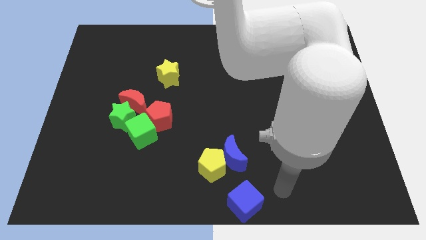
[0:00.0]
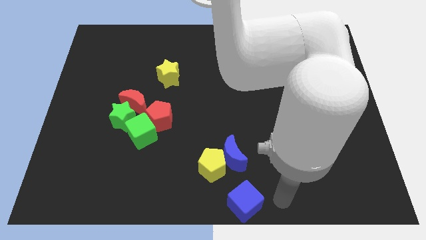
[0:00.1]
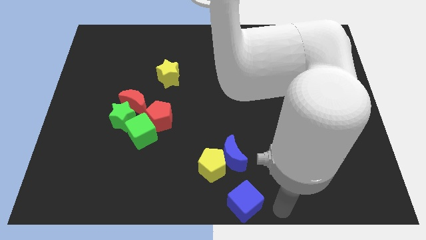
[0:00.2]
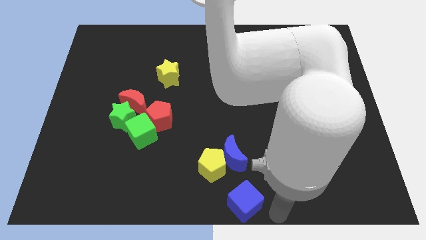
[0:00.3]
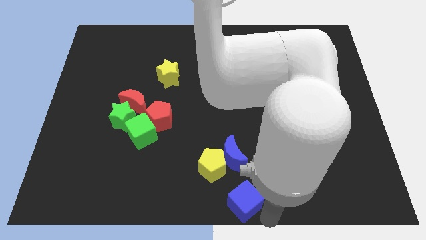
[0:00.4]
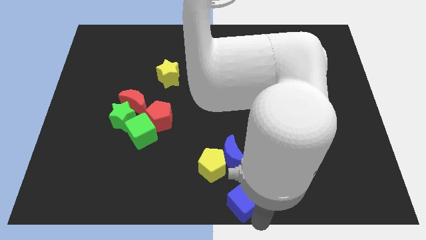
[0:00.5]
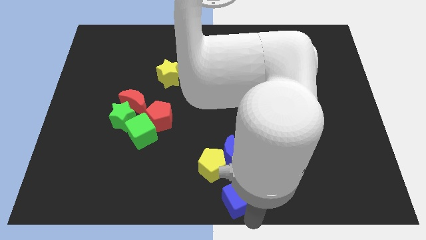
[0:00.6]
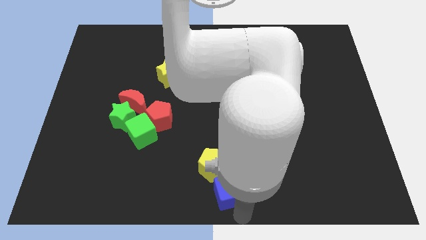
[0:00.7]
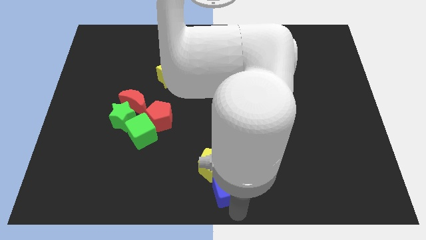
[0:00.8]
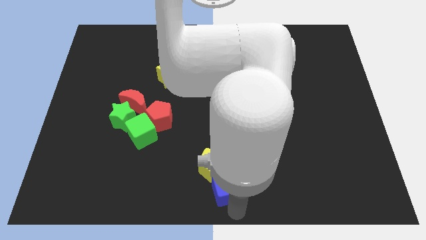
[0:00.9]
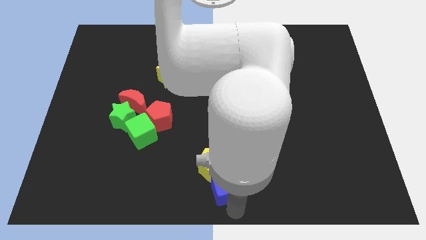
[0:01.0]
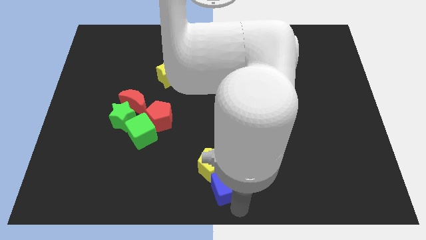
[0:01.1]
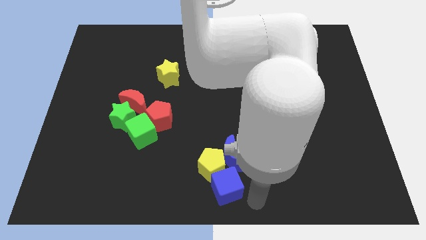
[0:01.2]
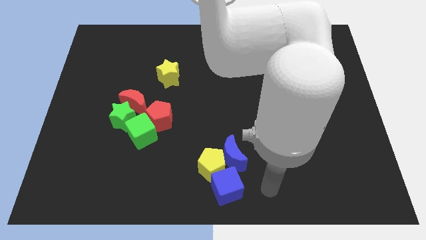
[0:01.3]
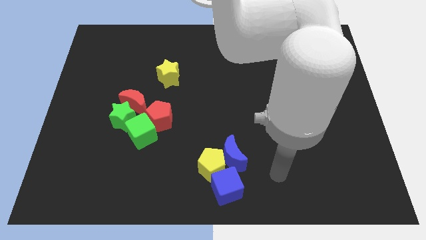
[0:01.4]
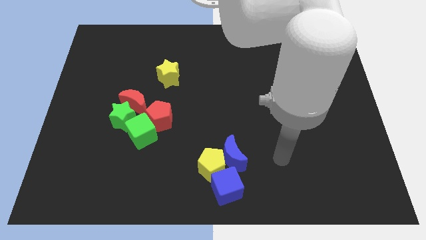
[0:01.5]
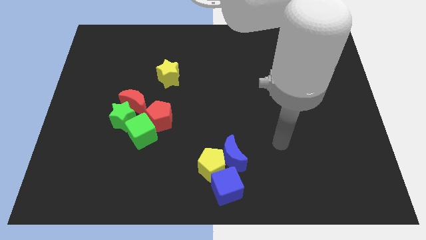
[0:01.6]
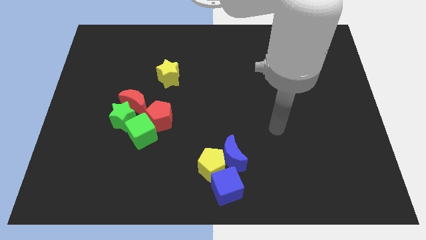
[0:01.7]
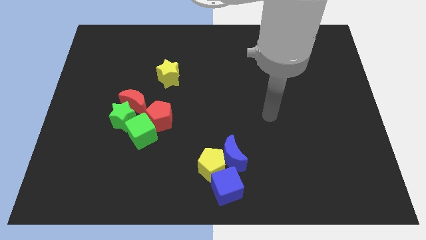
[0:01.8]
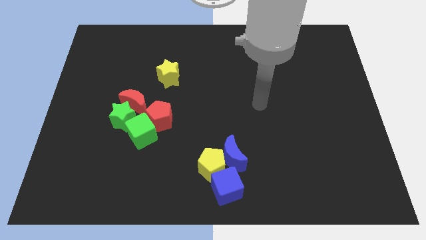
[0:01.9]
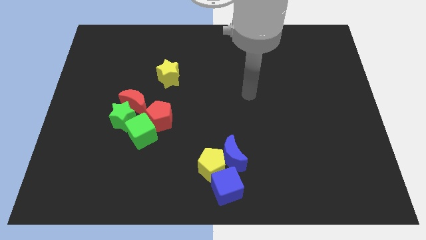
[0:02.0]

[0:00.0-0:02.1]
place the arm towards the center of the board

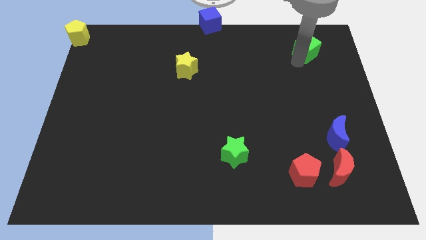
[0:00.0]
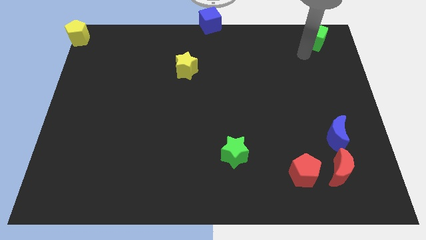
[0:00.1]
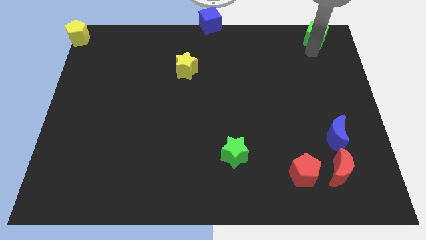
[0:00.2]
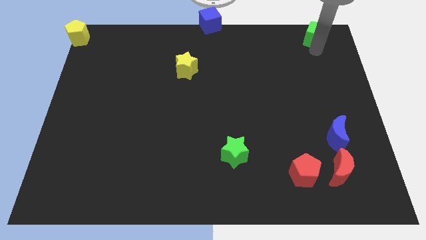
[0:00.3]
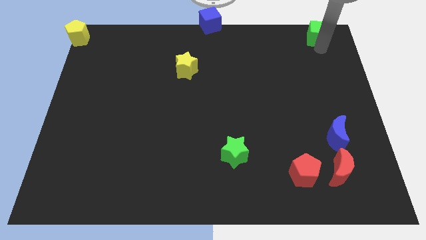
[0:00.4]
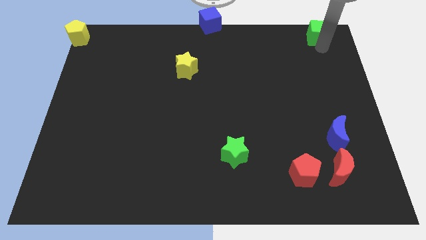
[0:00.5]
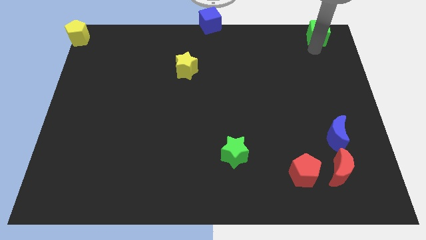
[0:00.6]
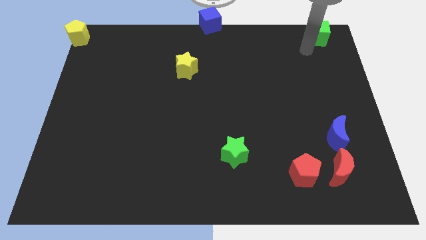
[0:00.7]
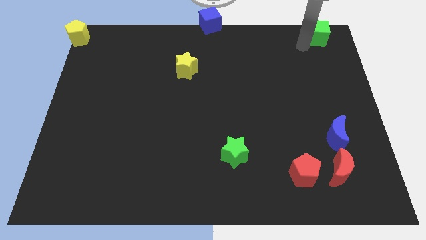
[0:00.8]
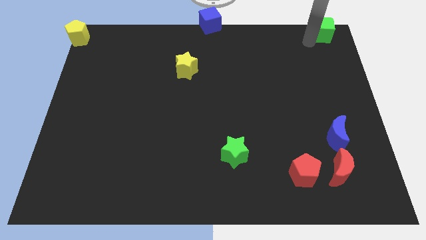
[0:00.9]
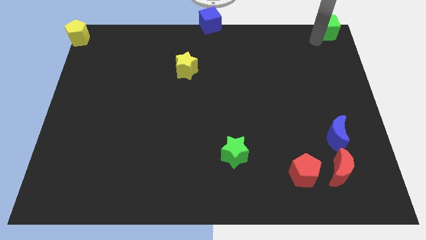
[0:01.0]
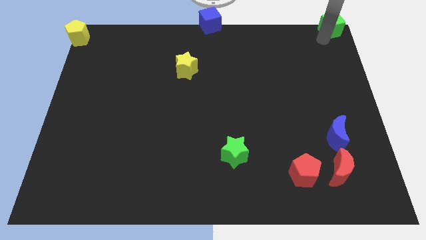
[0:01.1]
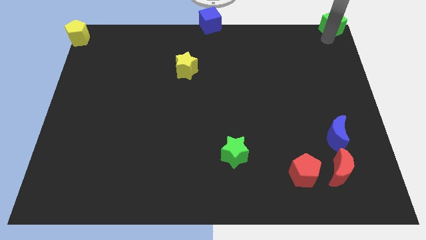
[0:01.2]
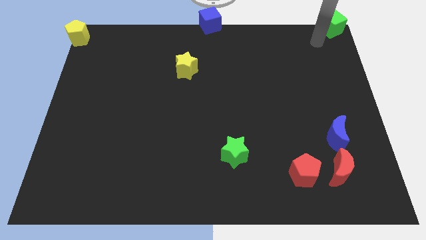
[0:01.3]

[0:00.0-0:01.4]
move green cube to the top right corner

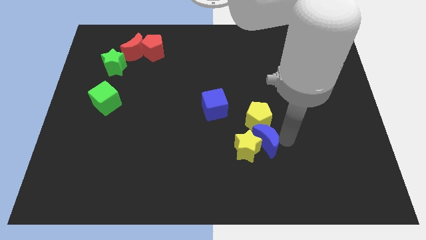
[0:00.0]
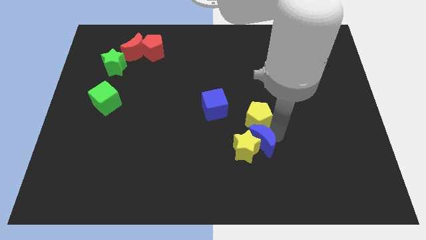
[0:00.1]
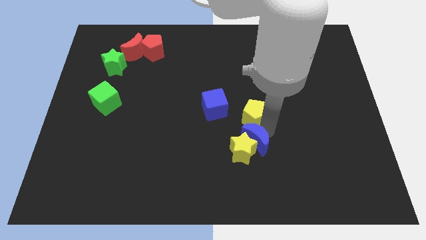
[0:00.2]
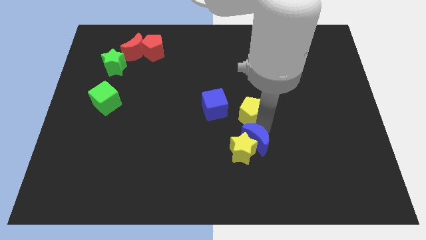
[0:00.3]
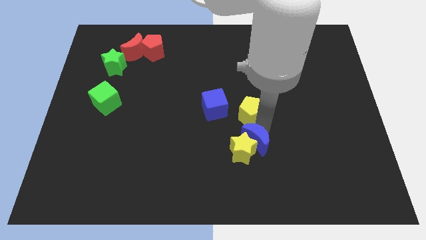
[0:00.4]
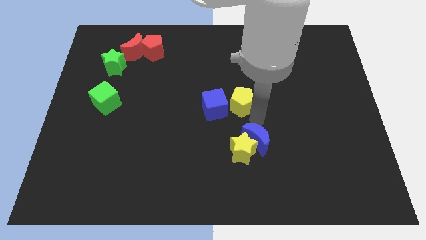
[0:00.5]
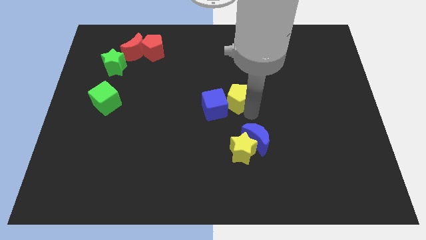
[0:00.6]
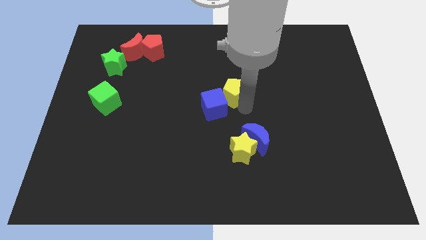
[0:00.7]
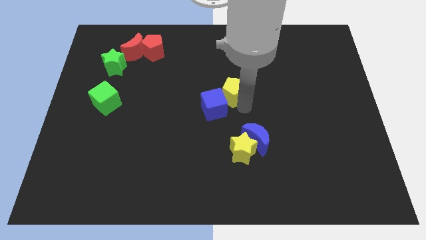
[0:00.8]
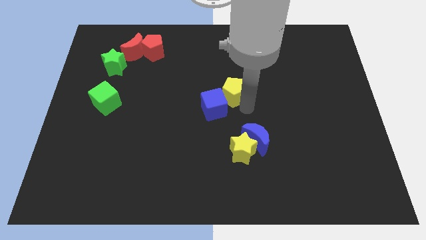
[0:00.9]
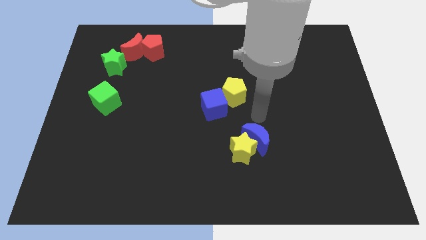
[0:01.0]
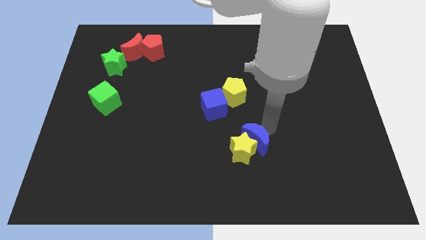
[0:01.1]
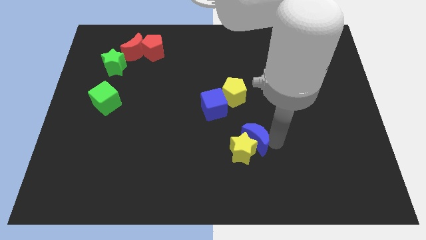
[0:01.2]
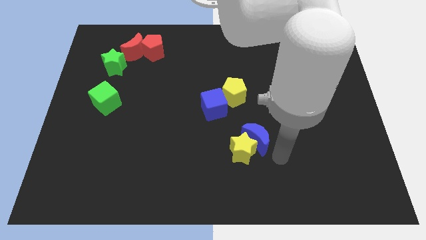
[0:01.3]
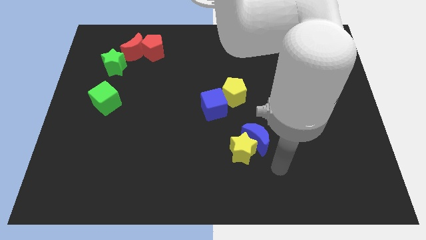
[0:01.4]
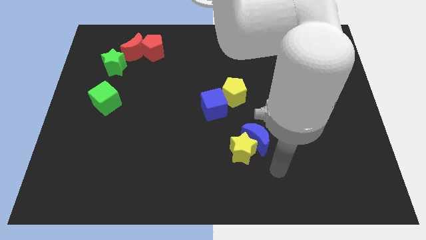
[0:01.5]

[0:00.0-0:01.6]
push the yellow pentagon to the top right side of the blue cube

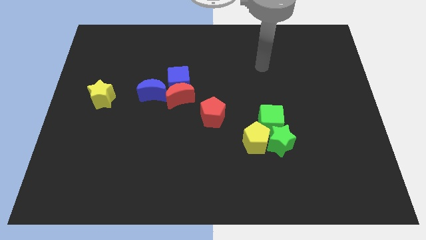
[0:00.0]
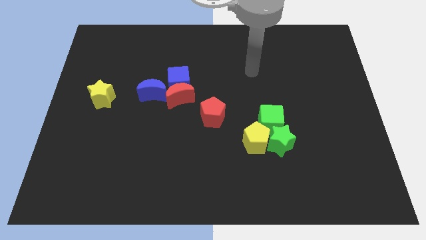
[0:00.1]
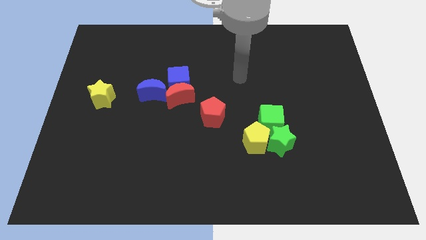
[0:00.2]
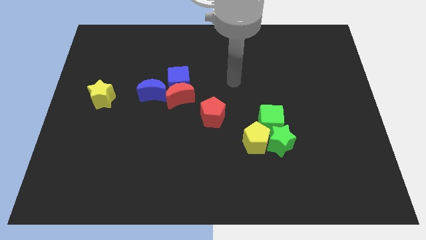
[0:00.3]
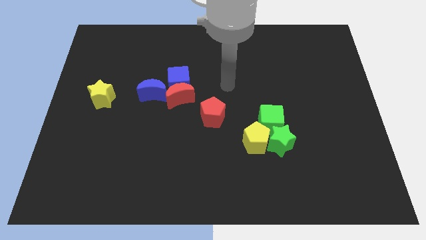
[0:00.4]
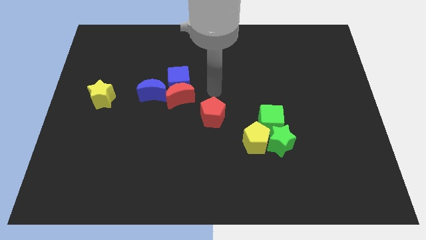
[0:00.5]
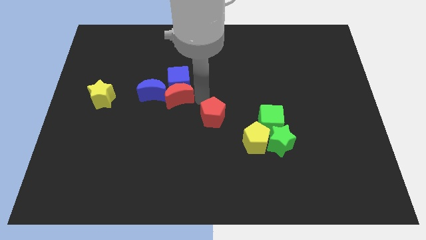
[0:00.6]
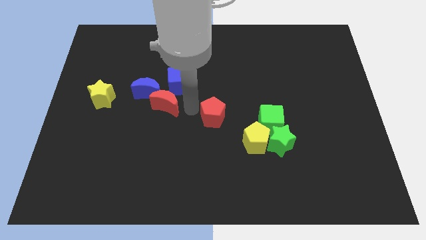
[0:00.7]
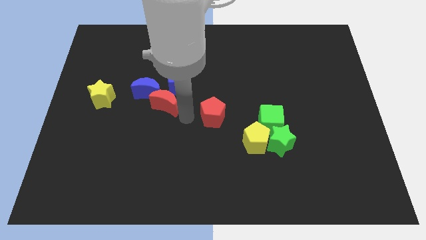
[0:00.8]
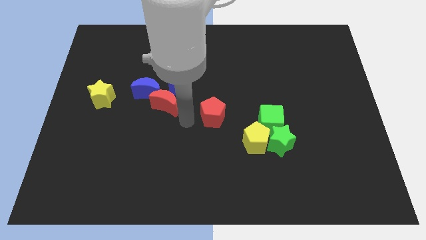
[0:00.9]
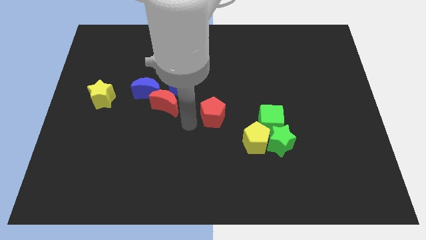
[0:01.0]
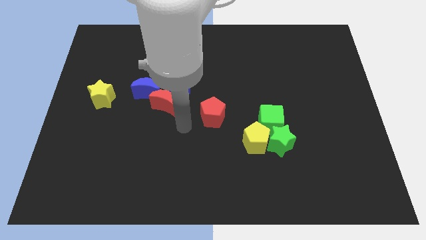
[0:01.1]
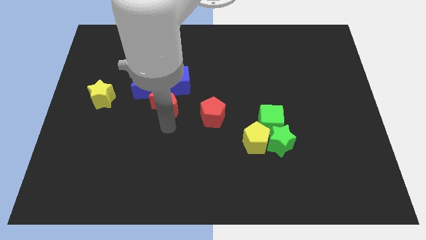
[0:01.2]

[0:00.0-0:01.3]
slightly push the red and blue moons

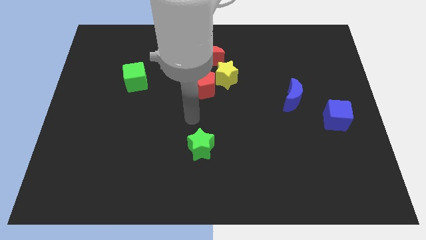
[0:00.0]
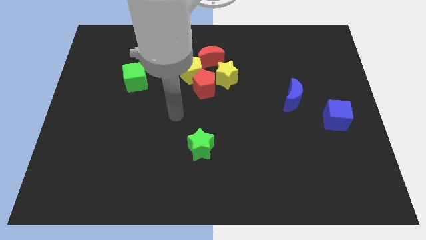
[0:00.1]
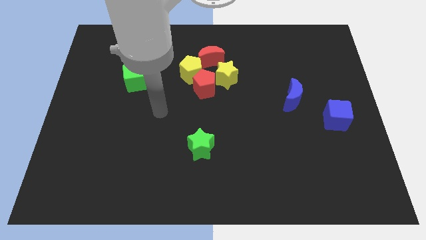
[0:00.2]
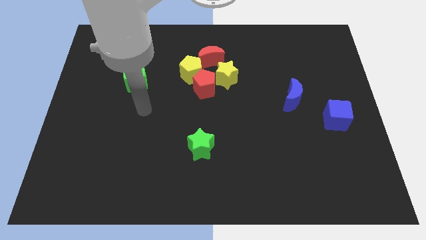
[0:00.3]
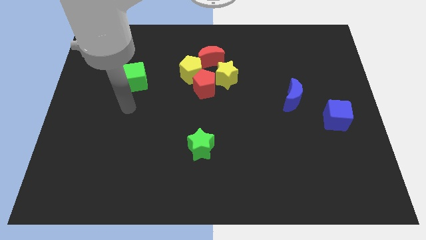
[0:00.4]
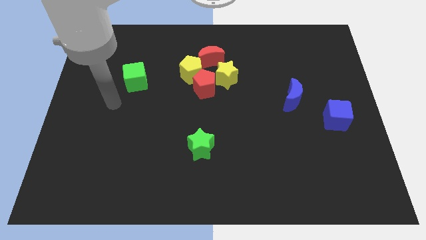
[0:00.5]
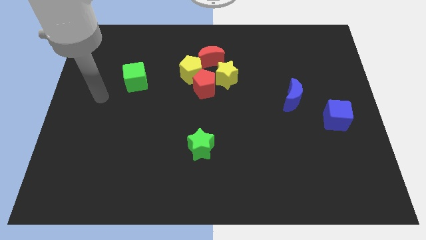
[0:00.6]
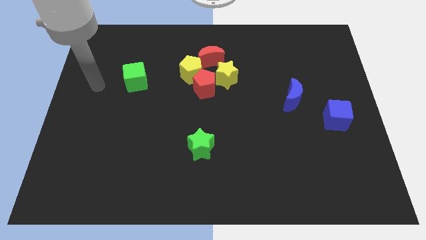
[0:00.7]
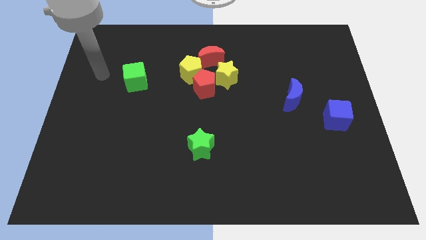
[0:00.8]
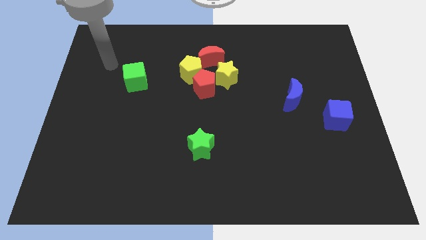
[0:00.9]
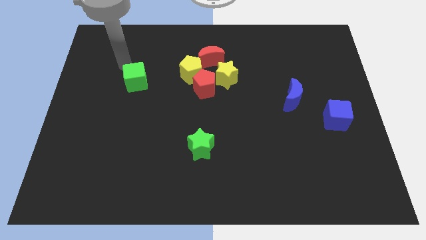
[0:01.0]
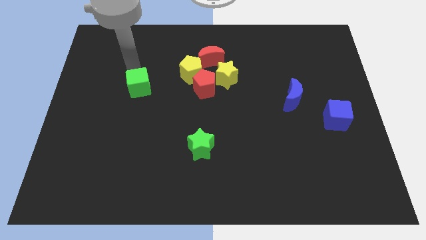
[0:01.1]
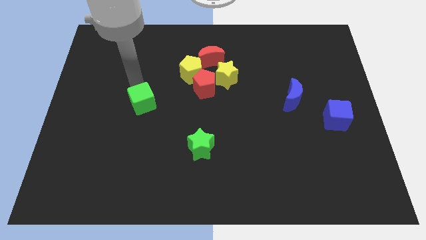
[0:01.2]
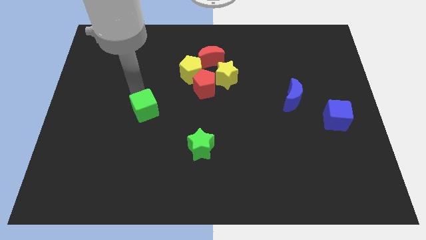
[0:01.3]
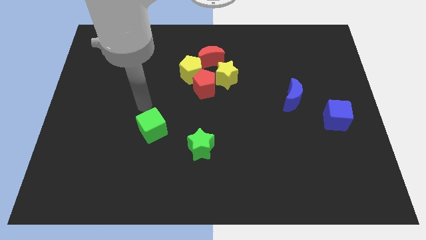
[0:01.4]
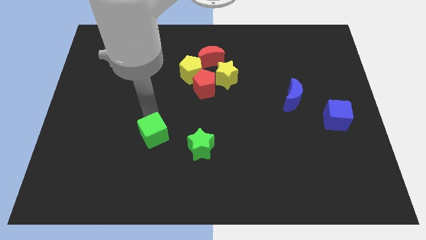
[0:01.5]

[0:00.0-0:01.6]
push the green cube towards the bottom center

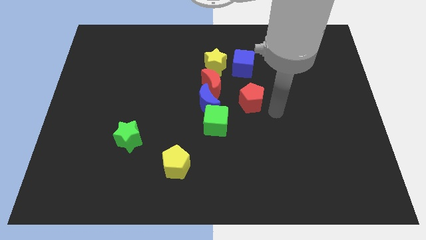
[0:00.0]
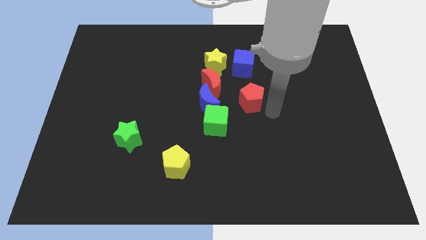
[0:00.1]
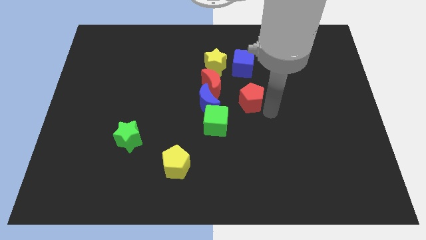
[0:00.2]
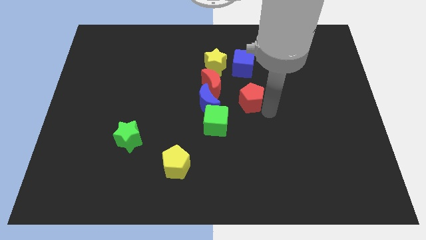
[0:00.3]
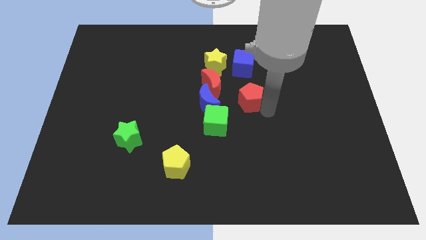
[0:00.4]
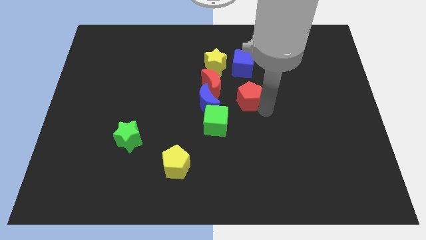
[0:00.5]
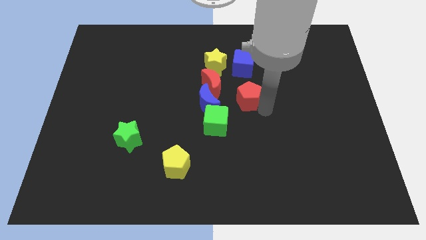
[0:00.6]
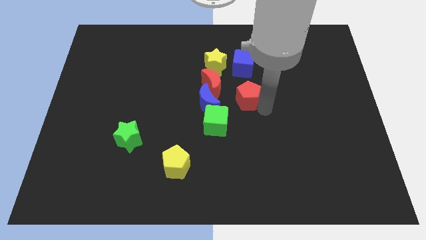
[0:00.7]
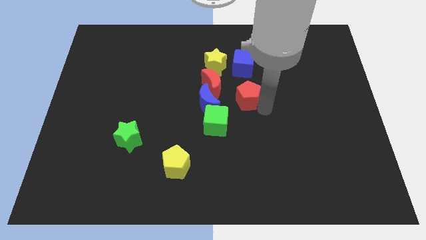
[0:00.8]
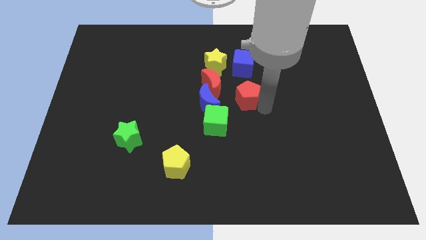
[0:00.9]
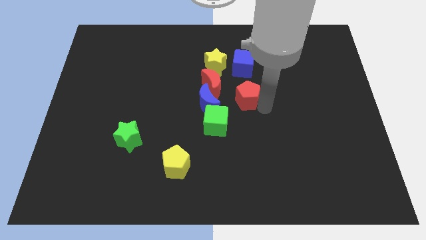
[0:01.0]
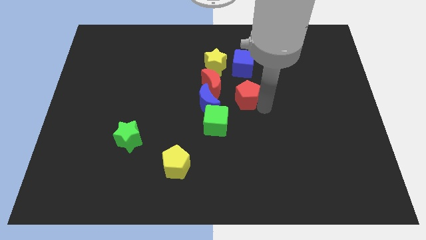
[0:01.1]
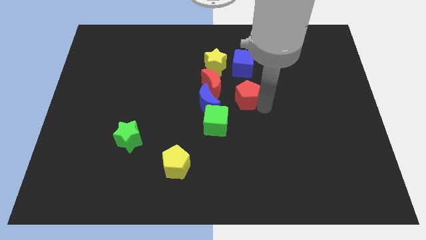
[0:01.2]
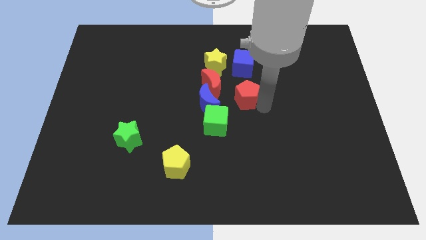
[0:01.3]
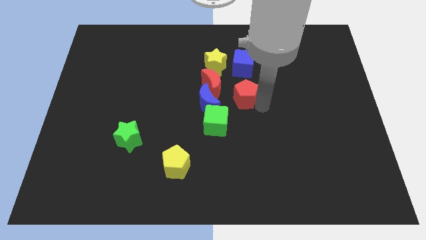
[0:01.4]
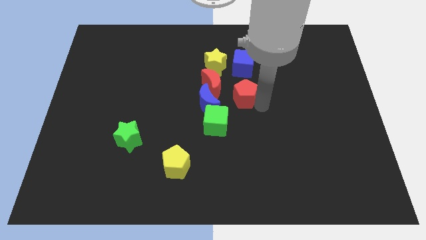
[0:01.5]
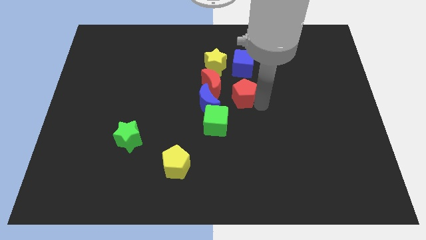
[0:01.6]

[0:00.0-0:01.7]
place the red pentagon to the right side of red and blue moons
